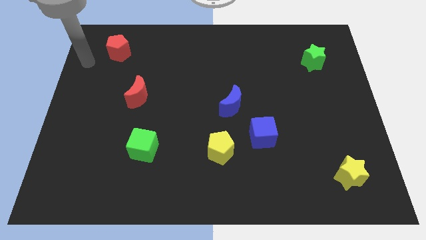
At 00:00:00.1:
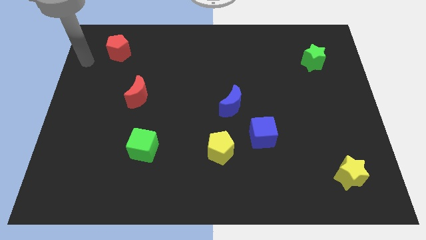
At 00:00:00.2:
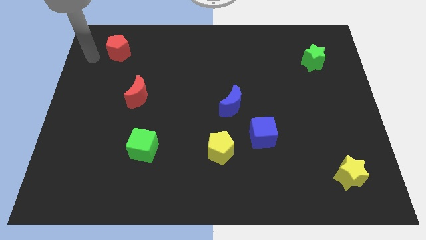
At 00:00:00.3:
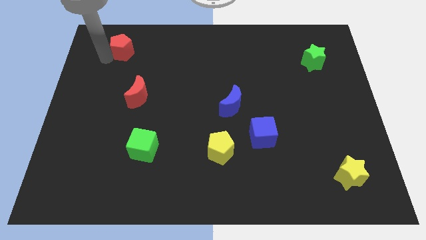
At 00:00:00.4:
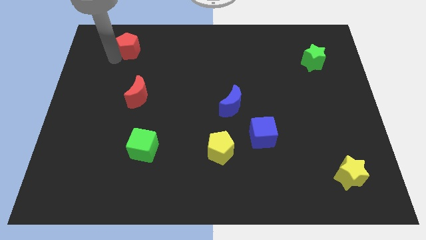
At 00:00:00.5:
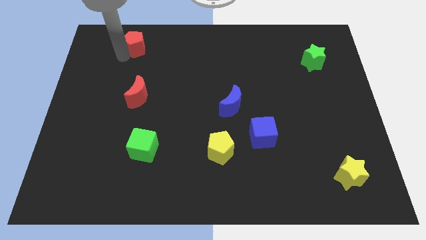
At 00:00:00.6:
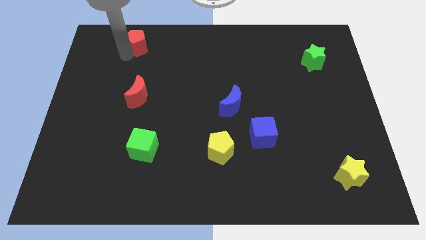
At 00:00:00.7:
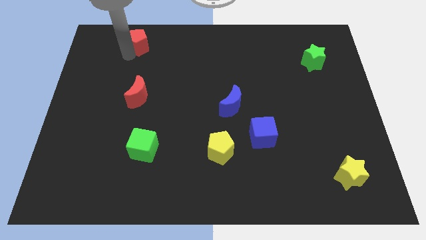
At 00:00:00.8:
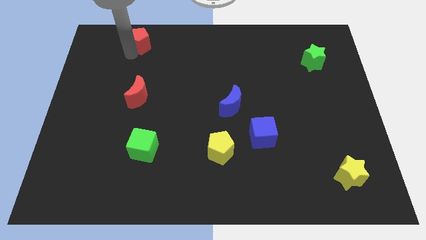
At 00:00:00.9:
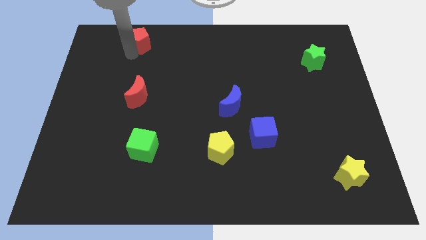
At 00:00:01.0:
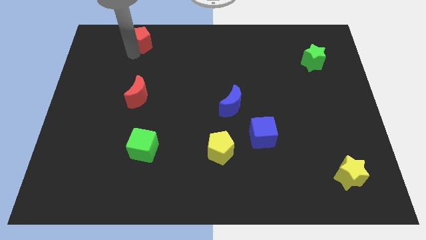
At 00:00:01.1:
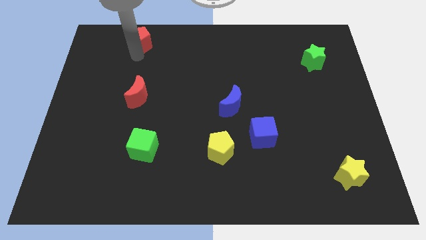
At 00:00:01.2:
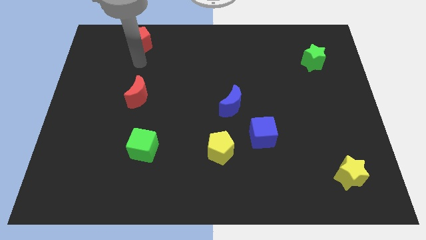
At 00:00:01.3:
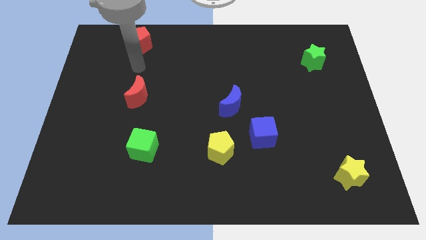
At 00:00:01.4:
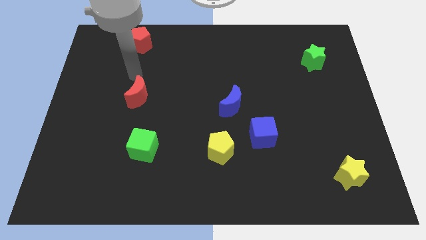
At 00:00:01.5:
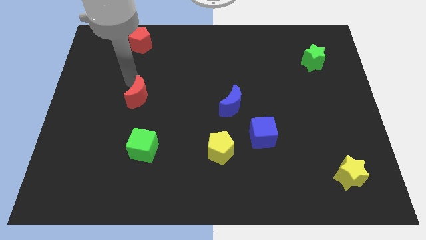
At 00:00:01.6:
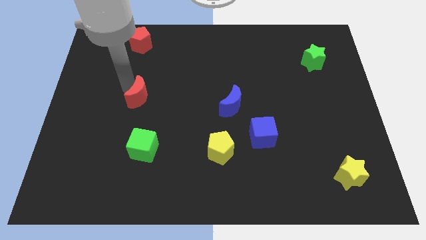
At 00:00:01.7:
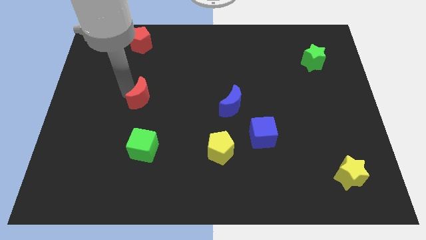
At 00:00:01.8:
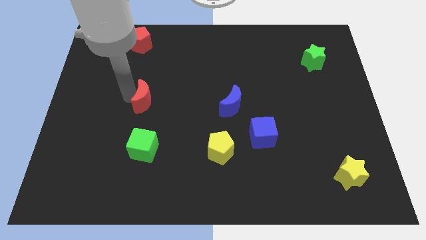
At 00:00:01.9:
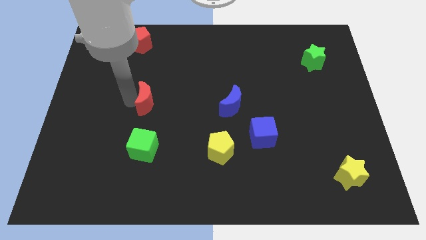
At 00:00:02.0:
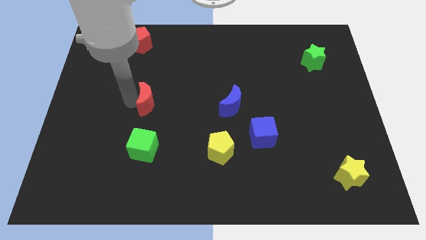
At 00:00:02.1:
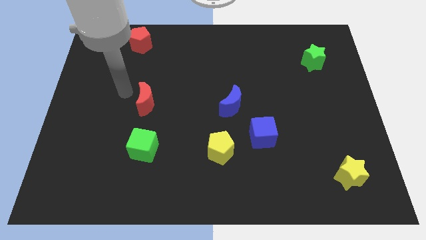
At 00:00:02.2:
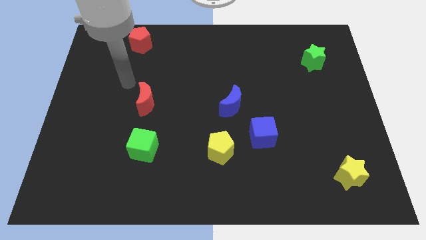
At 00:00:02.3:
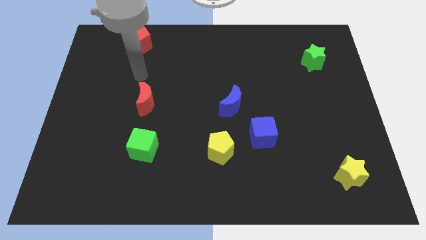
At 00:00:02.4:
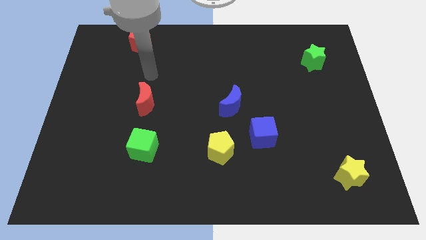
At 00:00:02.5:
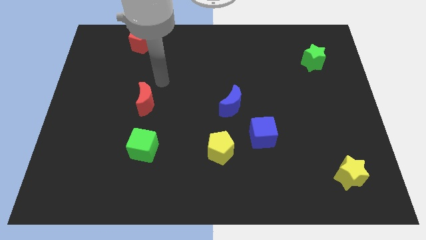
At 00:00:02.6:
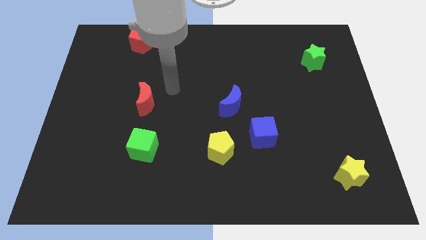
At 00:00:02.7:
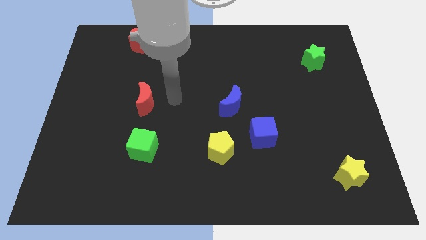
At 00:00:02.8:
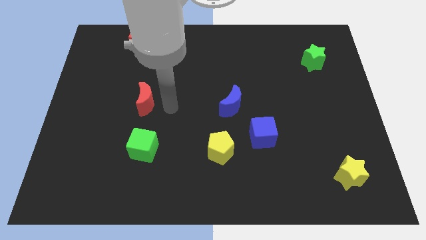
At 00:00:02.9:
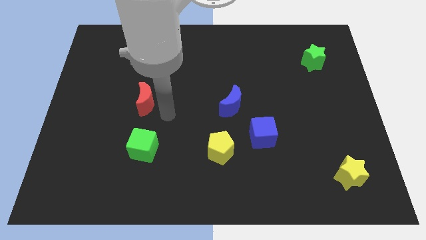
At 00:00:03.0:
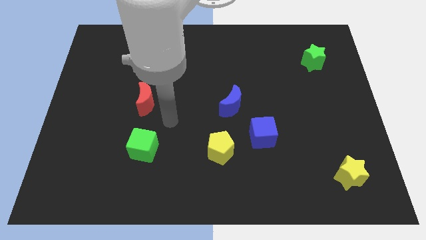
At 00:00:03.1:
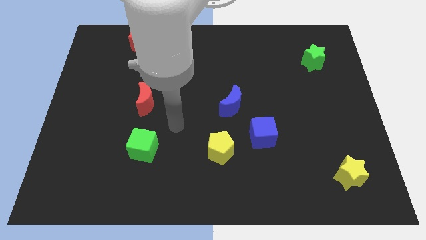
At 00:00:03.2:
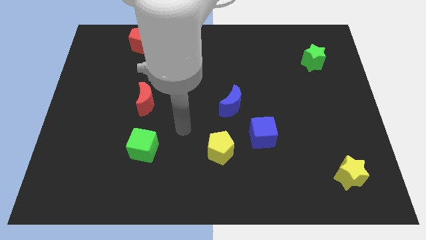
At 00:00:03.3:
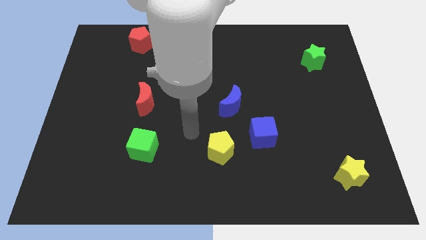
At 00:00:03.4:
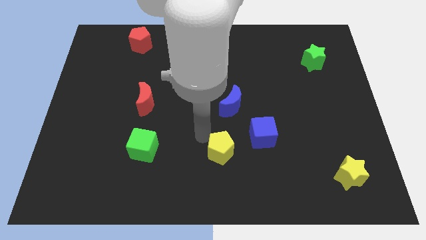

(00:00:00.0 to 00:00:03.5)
slightly move the red blocks to the right of the board

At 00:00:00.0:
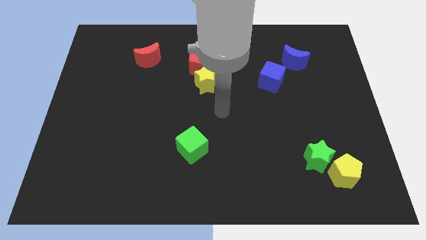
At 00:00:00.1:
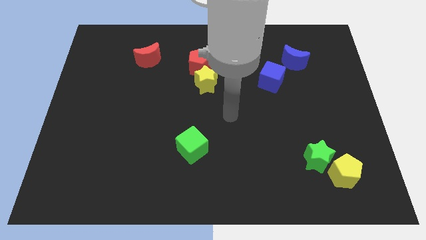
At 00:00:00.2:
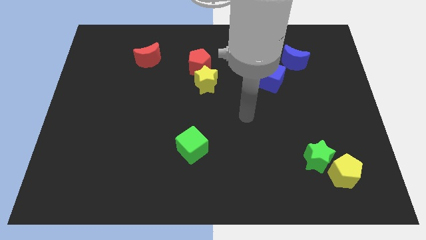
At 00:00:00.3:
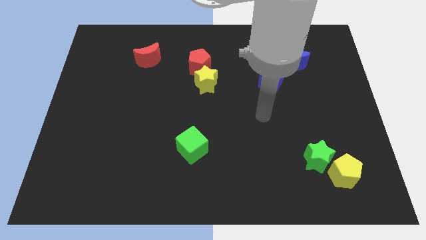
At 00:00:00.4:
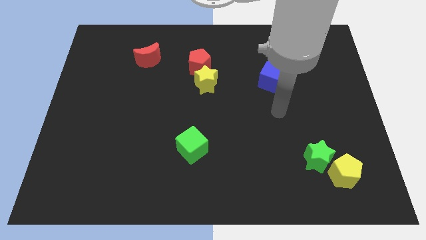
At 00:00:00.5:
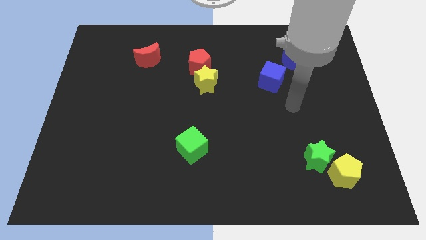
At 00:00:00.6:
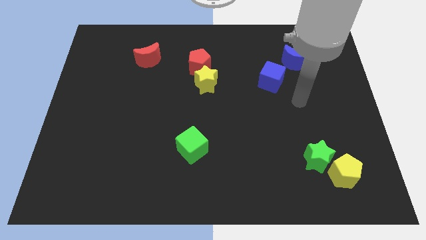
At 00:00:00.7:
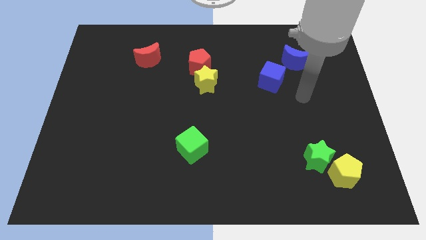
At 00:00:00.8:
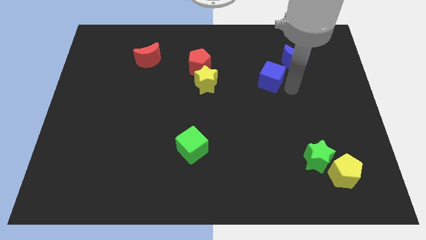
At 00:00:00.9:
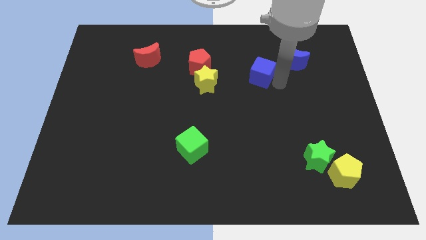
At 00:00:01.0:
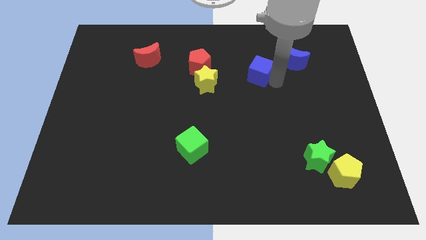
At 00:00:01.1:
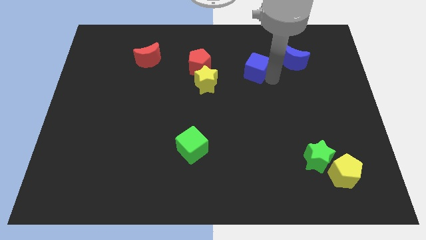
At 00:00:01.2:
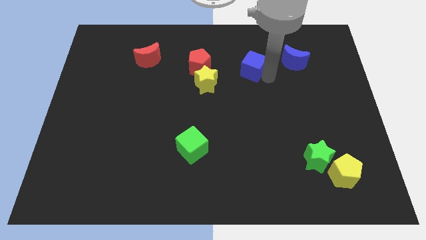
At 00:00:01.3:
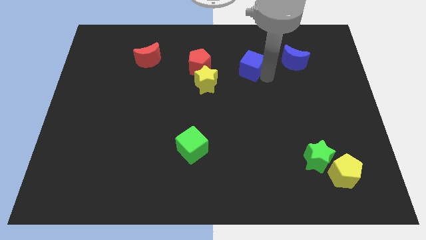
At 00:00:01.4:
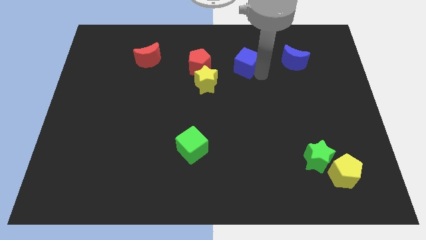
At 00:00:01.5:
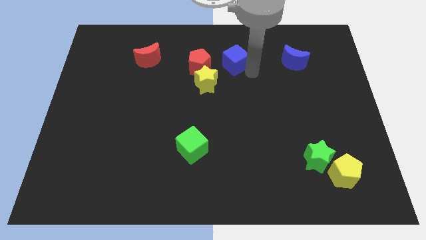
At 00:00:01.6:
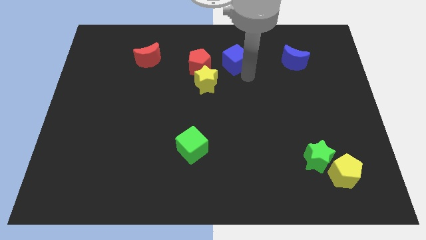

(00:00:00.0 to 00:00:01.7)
push the blue cube in between the red pentagon and blue crescent

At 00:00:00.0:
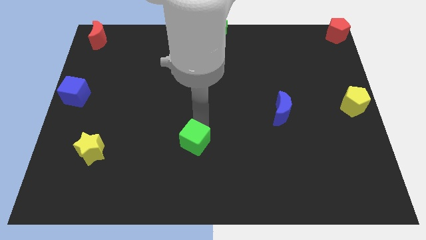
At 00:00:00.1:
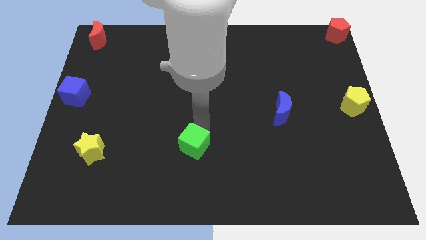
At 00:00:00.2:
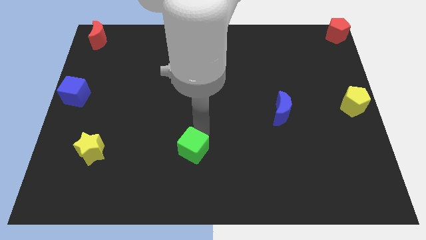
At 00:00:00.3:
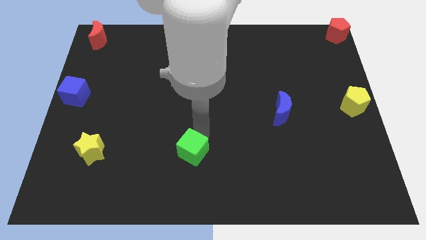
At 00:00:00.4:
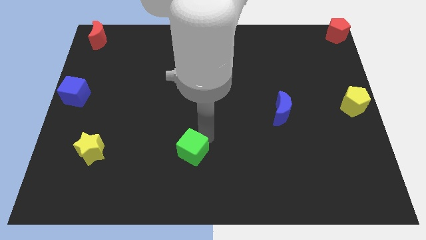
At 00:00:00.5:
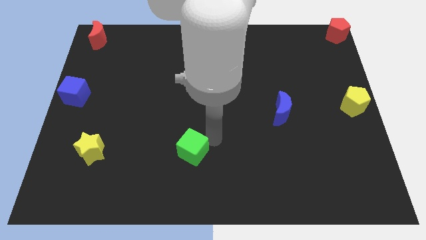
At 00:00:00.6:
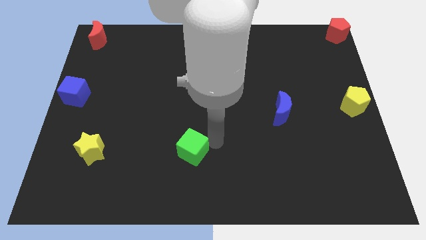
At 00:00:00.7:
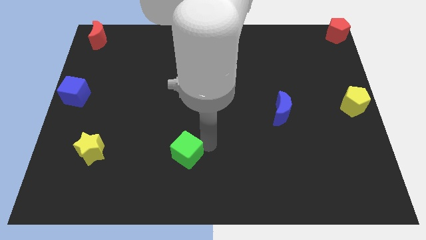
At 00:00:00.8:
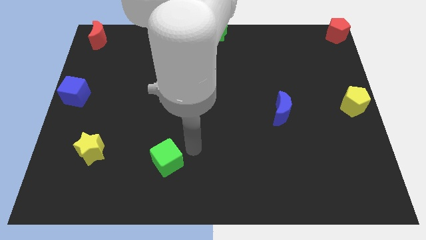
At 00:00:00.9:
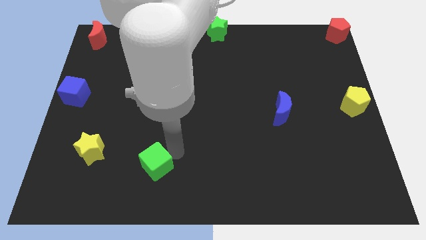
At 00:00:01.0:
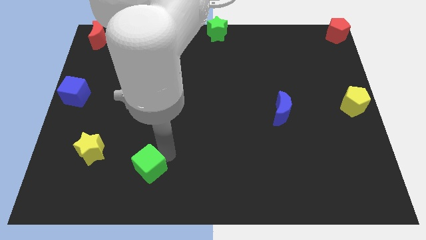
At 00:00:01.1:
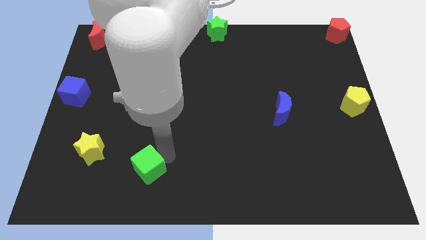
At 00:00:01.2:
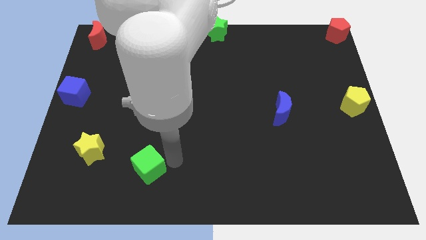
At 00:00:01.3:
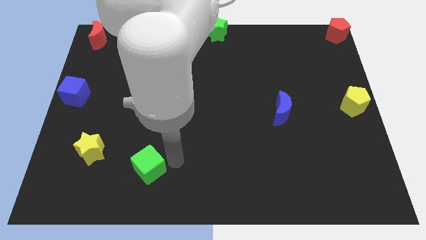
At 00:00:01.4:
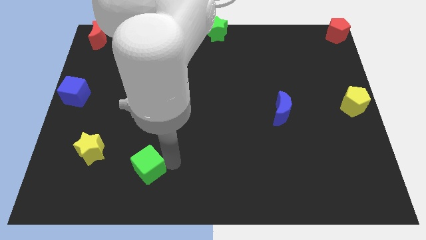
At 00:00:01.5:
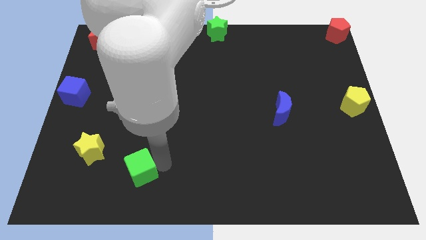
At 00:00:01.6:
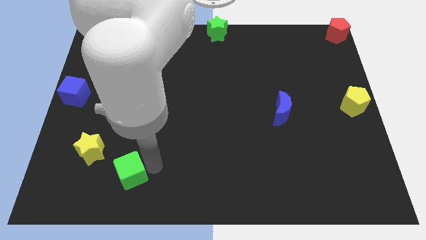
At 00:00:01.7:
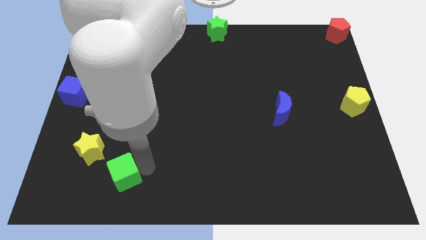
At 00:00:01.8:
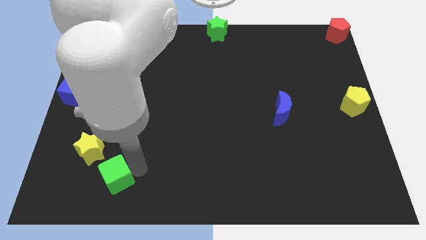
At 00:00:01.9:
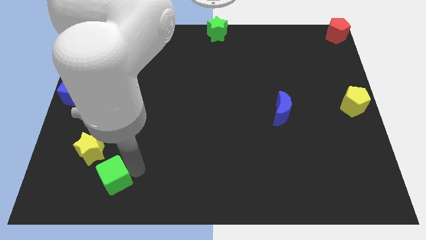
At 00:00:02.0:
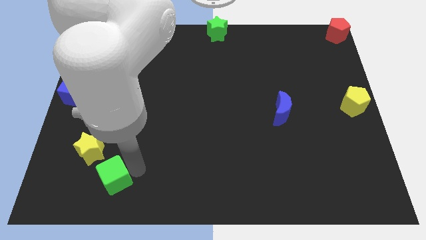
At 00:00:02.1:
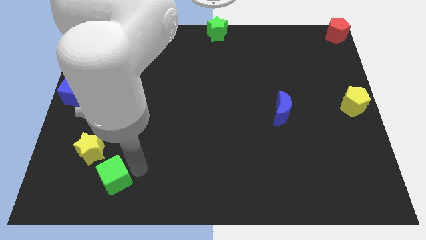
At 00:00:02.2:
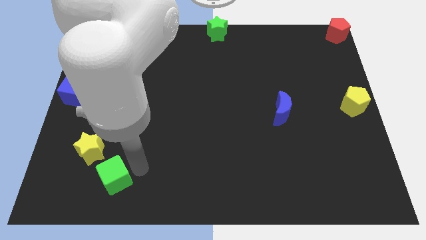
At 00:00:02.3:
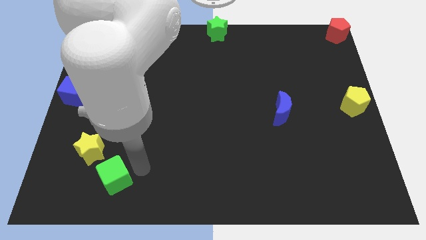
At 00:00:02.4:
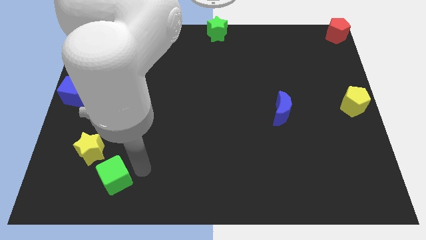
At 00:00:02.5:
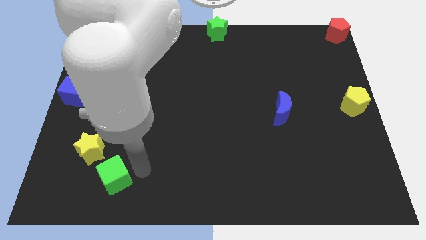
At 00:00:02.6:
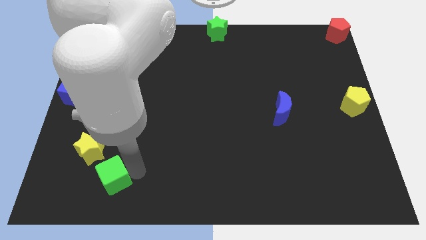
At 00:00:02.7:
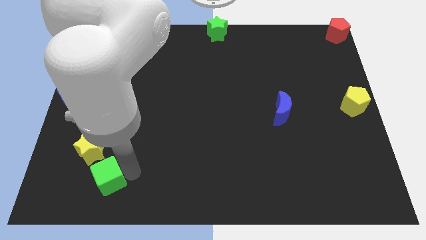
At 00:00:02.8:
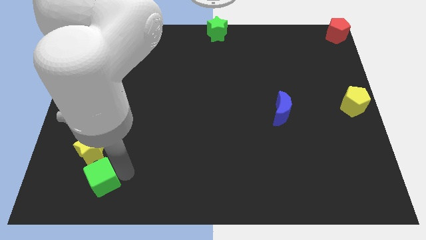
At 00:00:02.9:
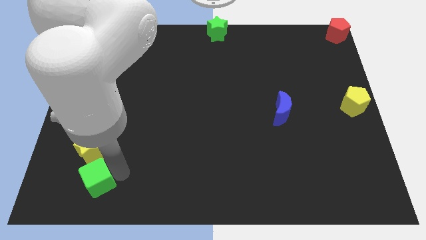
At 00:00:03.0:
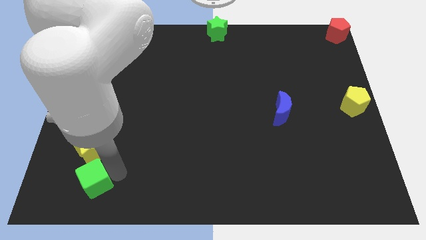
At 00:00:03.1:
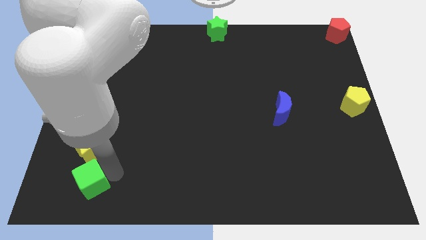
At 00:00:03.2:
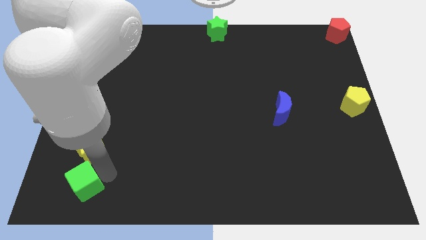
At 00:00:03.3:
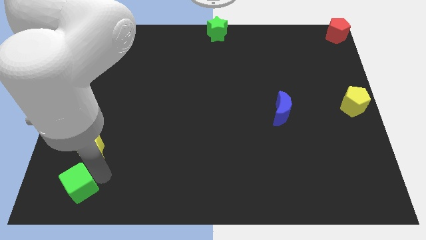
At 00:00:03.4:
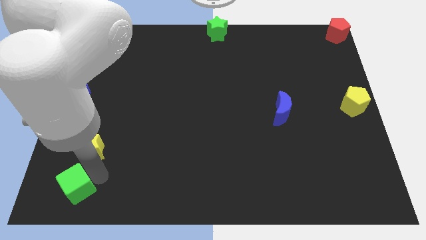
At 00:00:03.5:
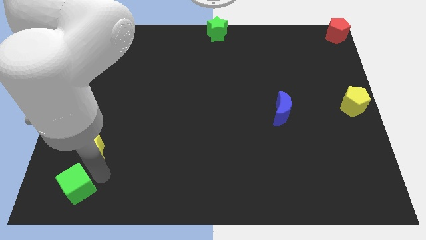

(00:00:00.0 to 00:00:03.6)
move the blue cube vertical parallel to the yellow star
